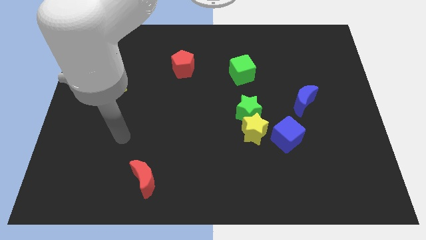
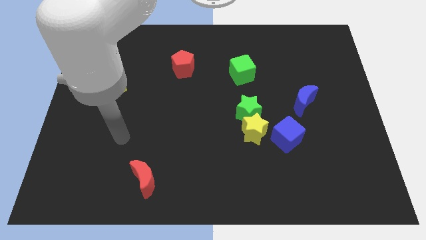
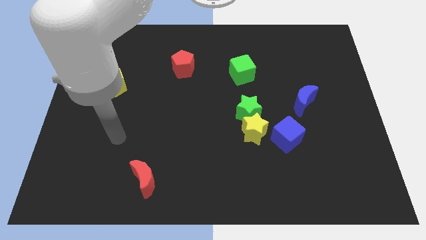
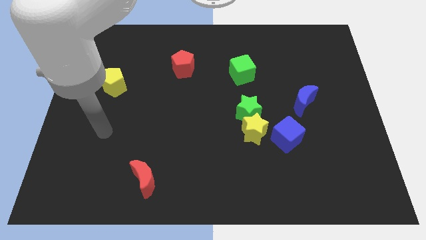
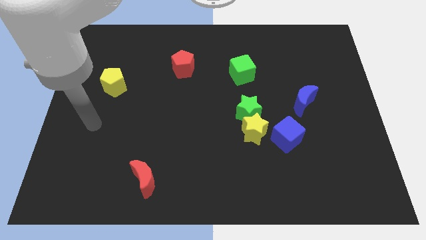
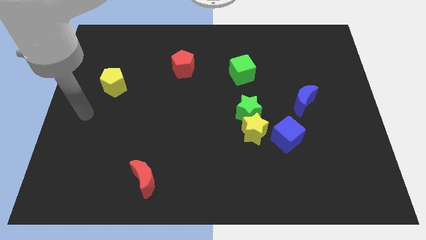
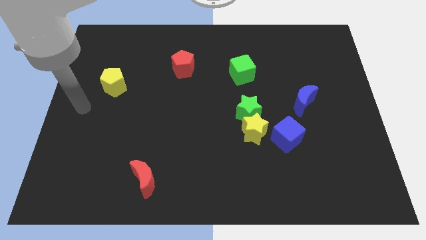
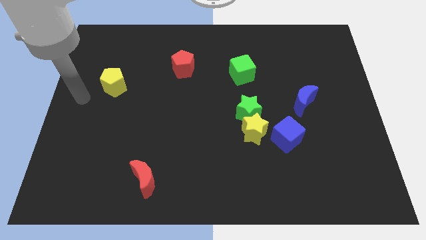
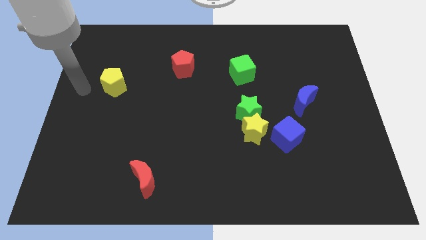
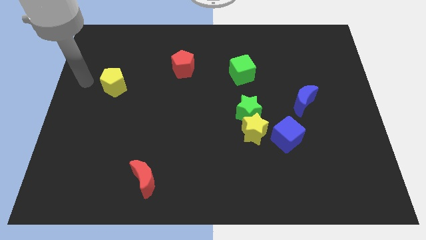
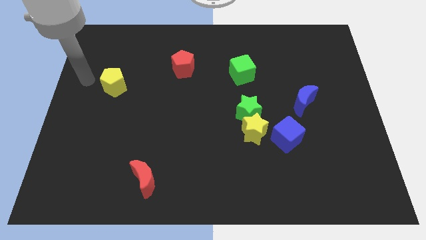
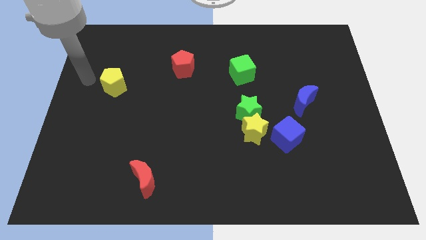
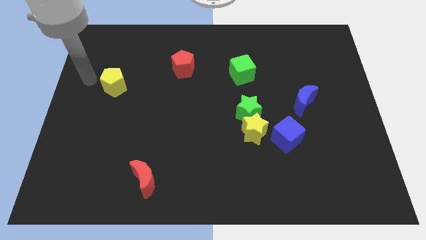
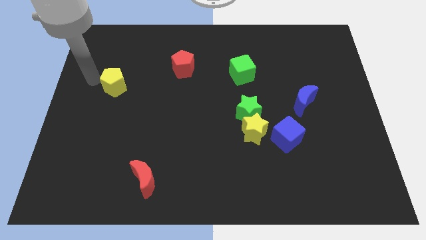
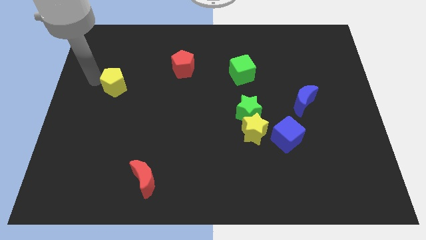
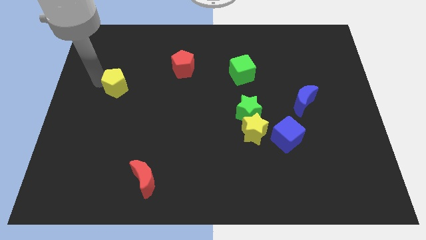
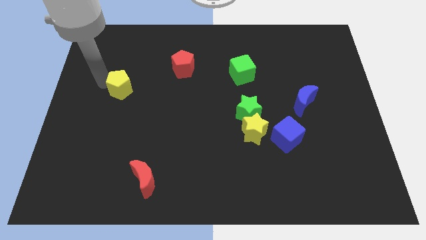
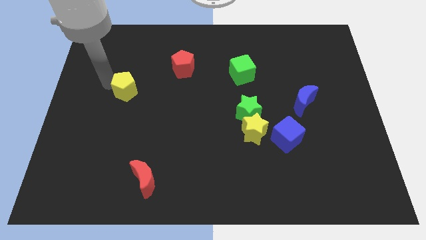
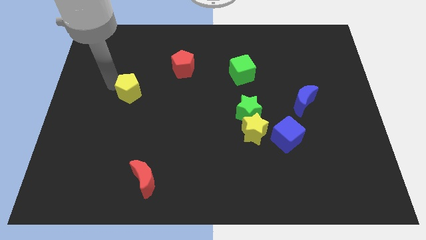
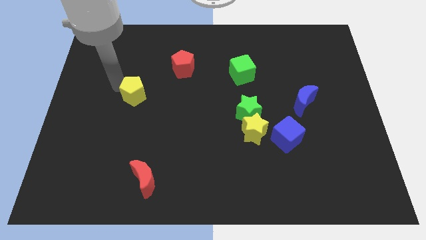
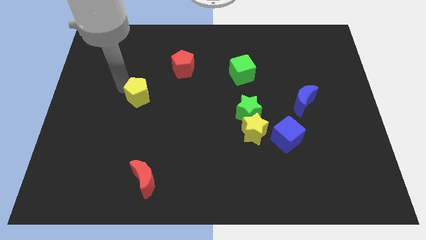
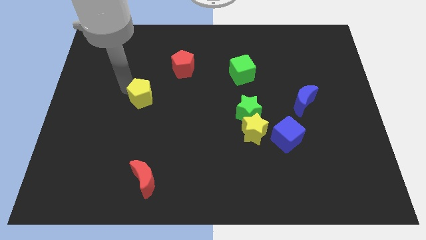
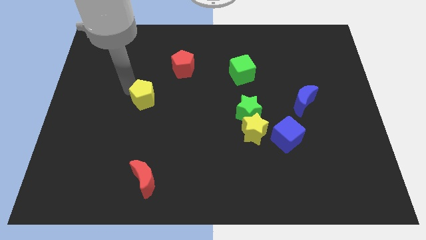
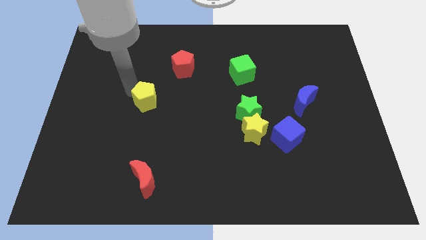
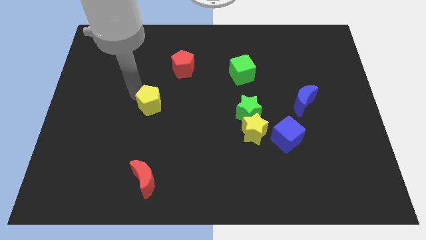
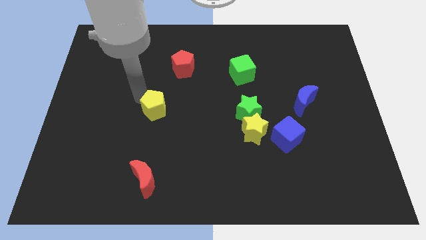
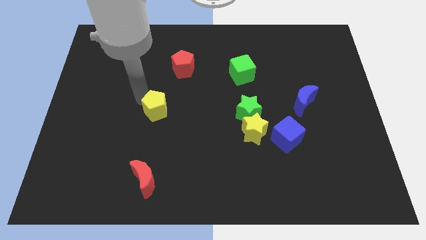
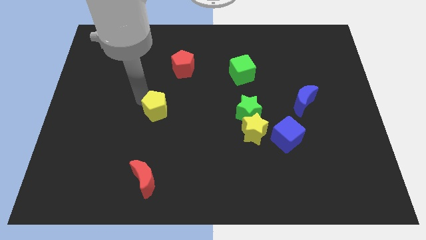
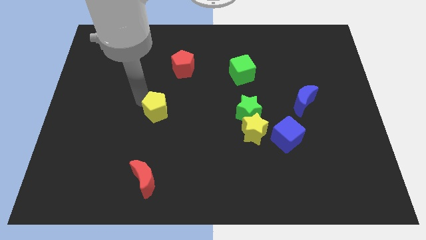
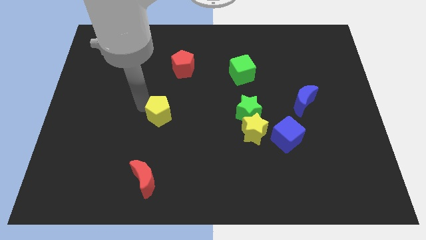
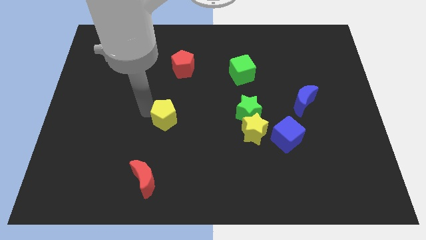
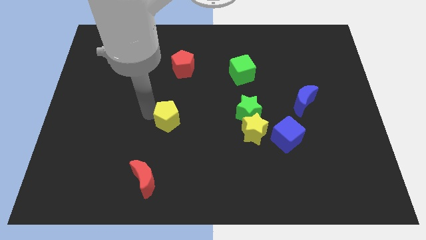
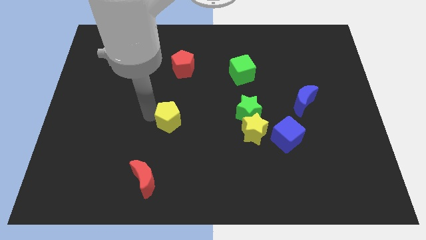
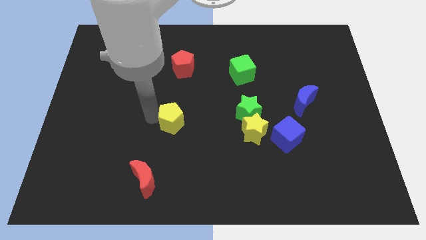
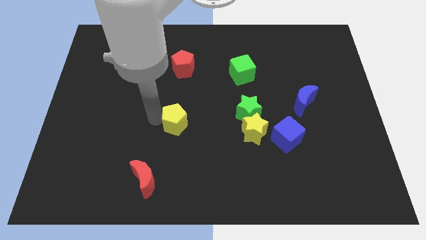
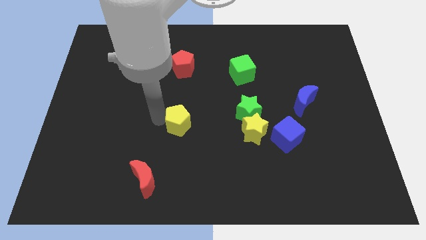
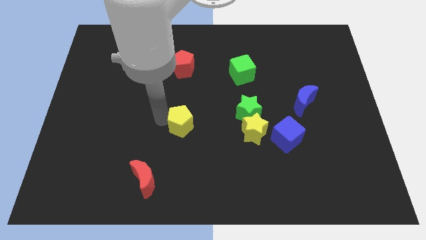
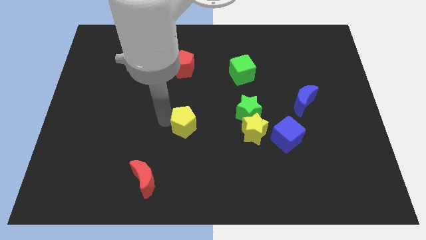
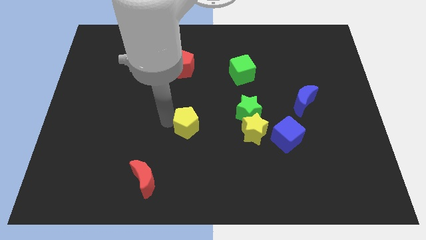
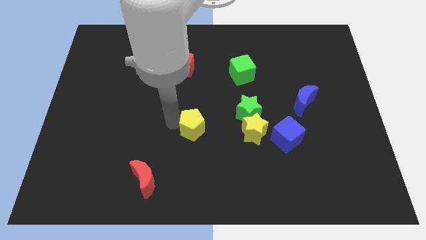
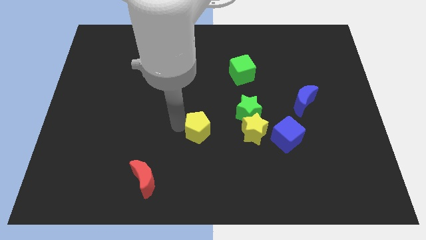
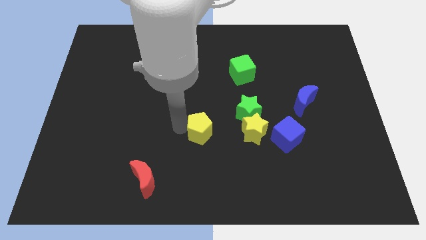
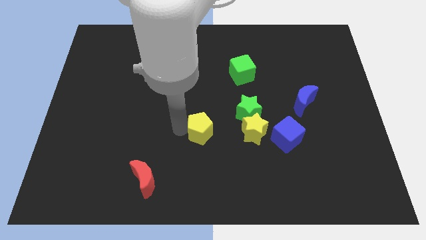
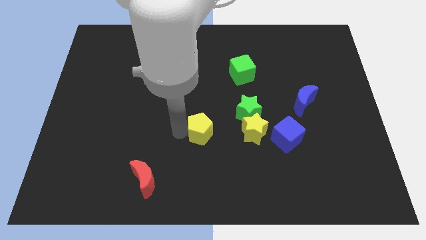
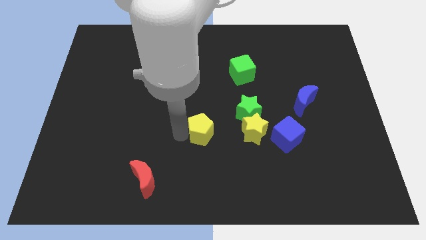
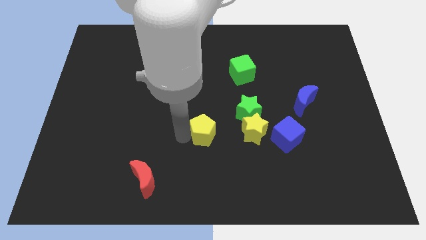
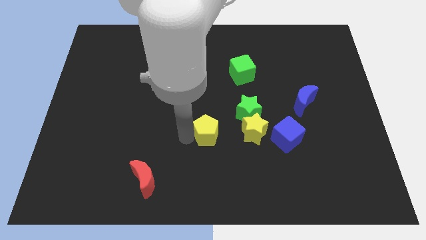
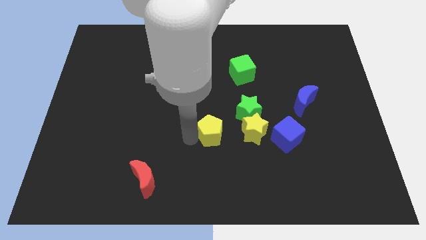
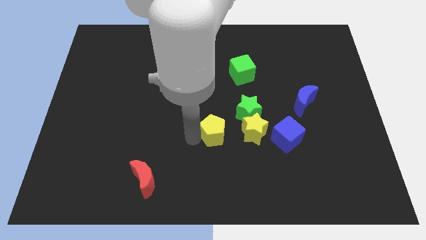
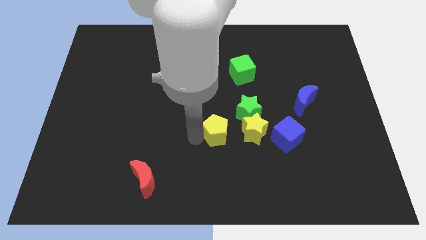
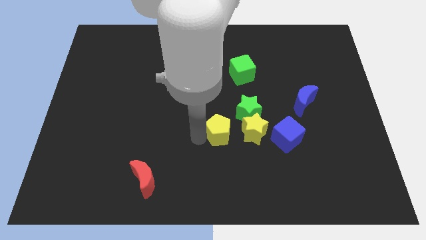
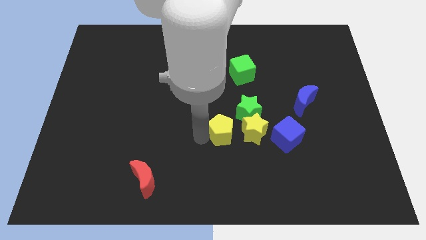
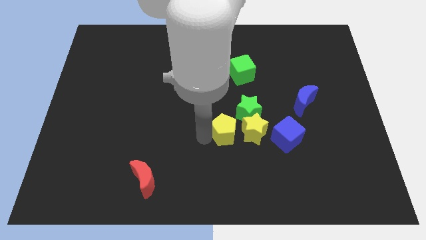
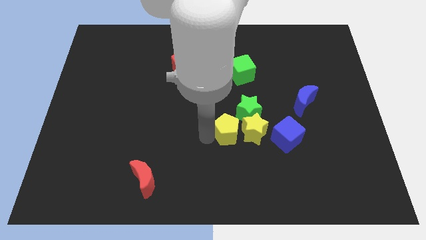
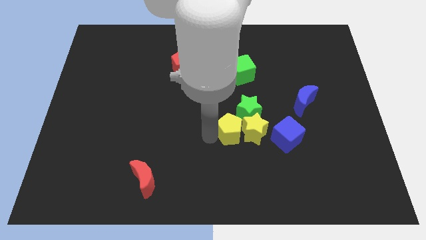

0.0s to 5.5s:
push the yellow pentagon towards the yellow star

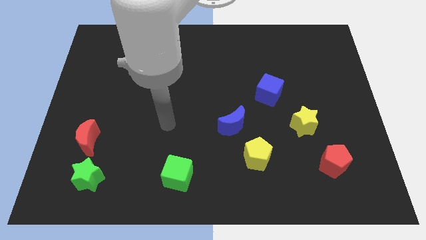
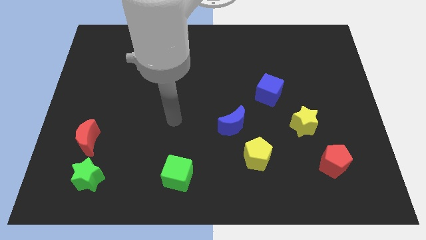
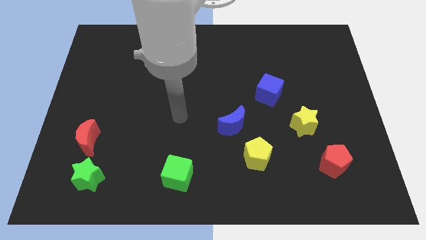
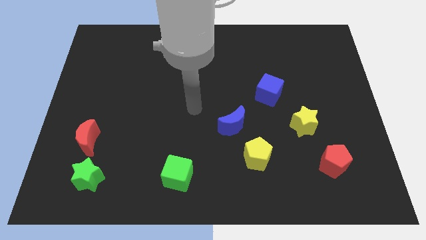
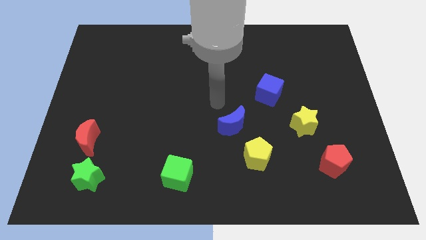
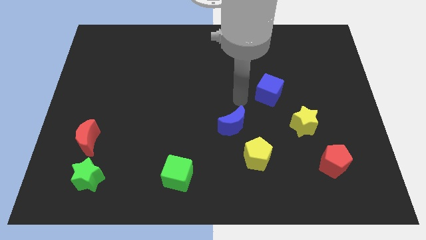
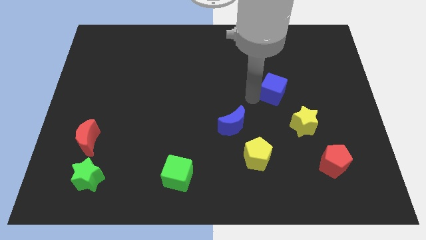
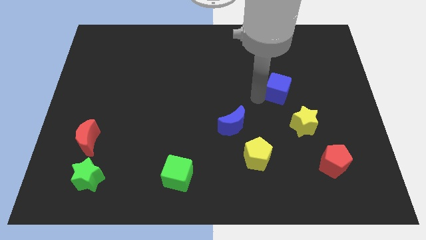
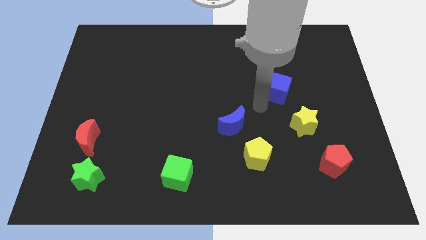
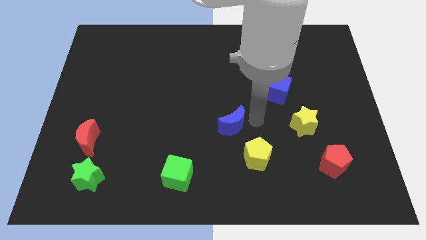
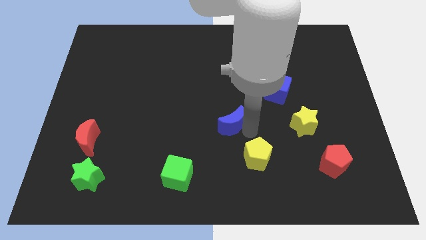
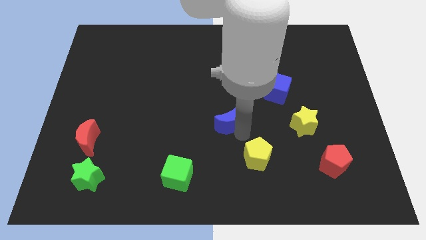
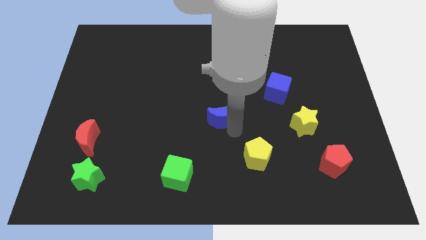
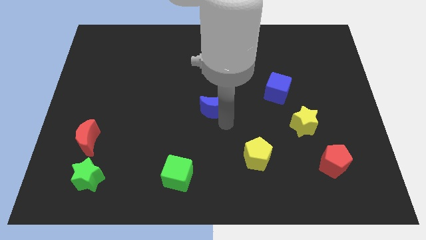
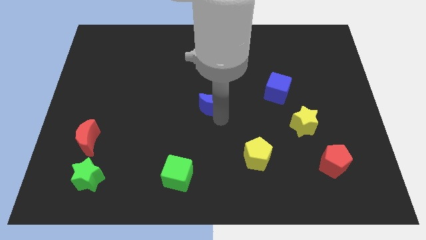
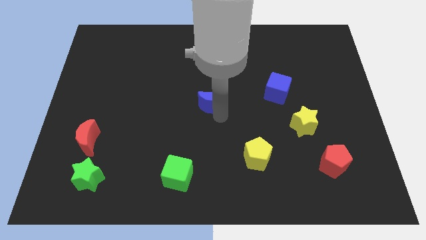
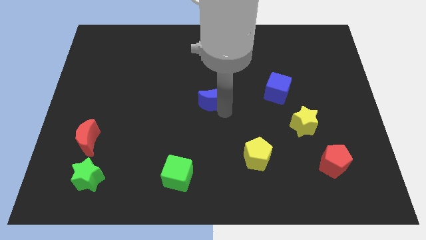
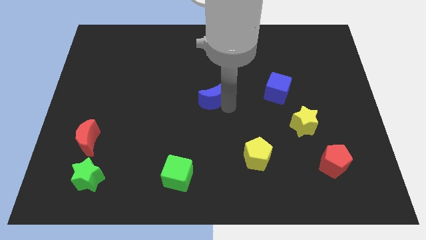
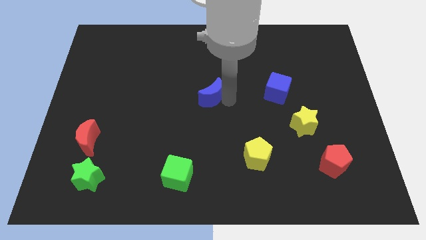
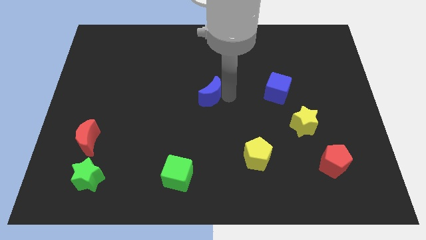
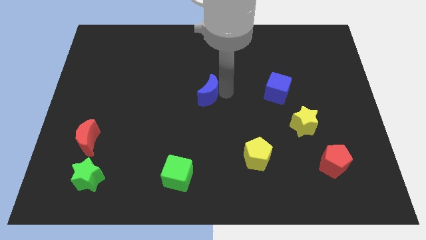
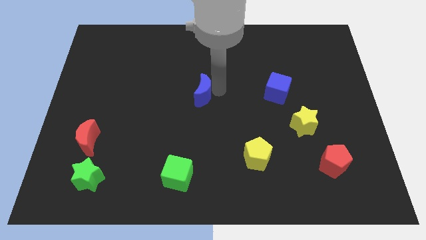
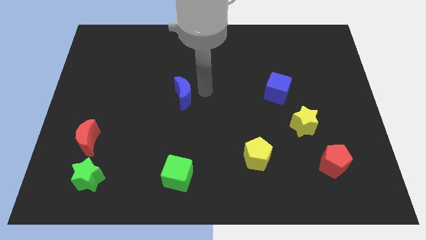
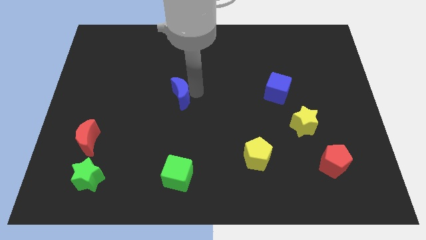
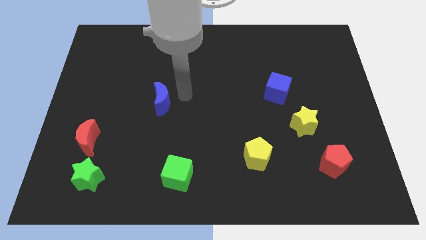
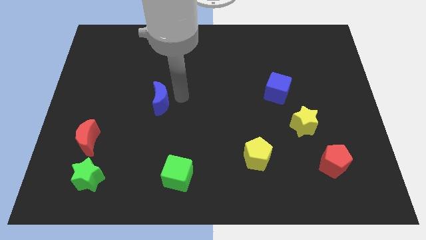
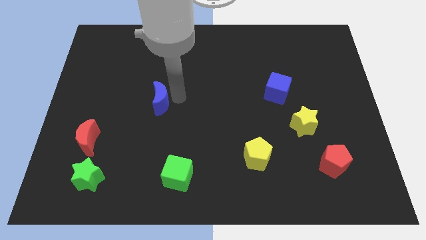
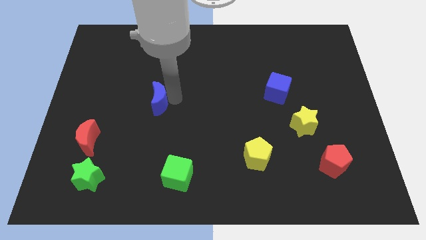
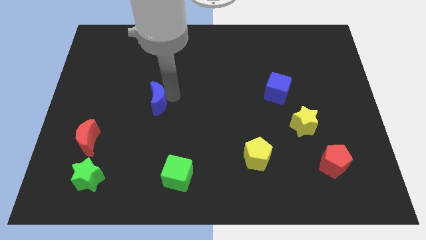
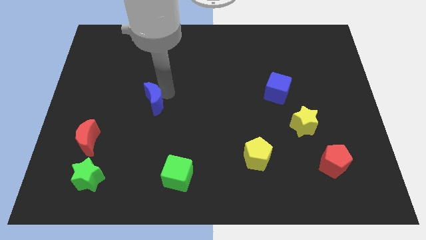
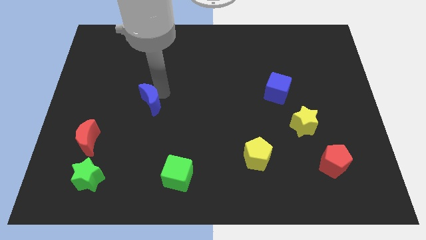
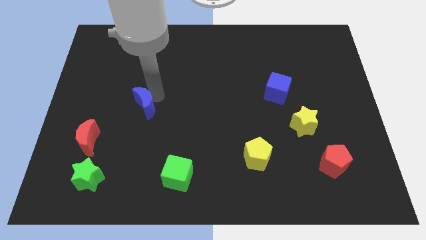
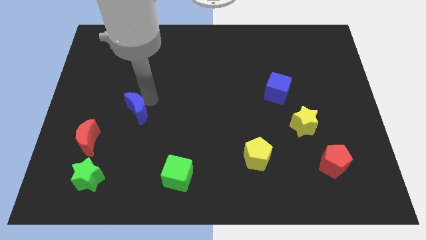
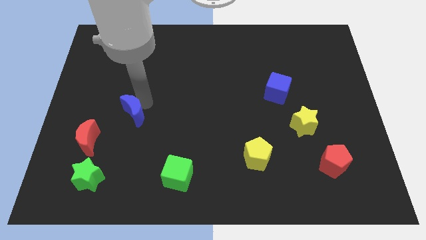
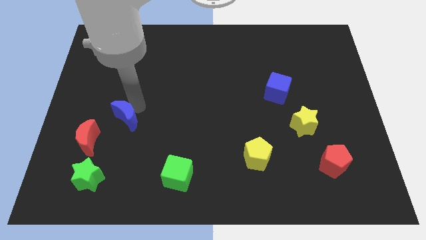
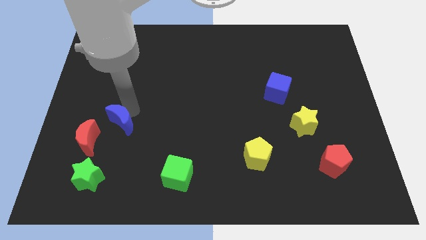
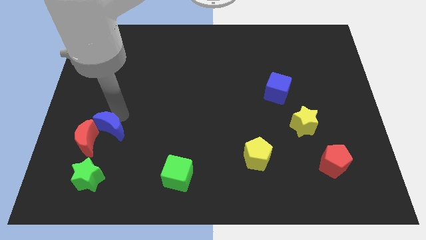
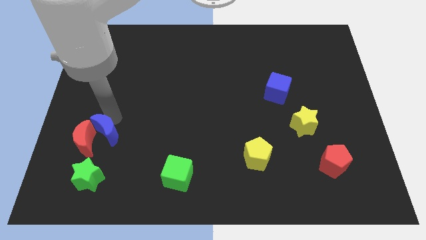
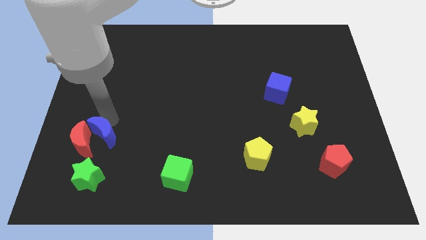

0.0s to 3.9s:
slide the blue moon towards the red moon
